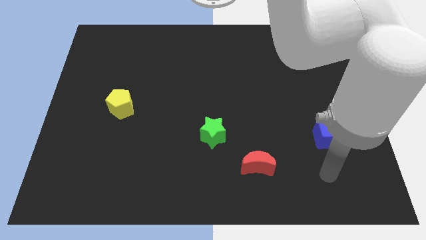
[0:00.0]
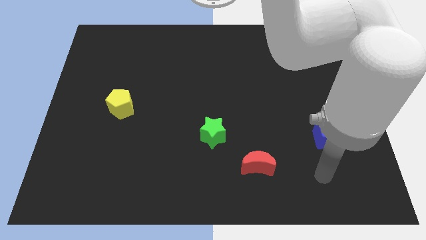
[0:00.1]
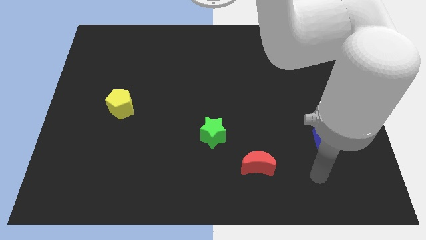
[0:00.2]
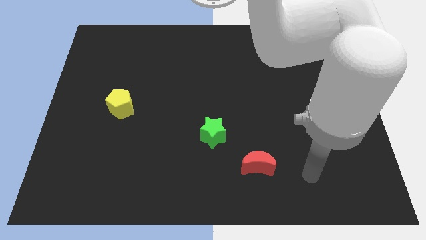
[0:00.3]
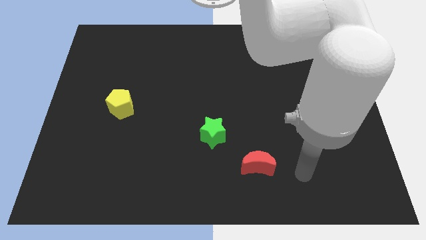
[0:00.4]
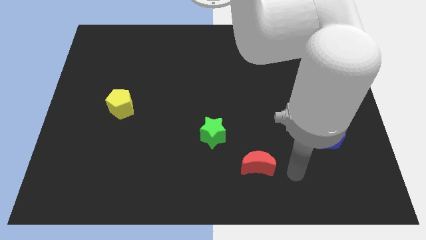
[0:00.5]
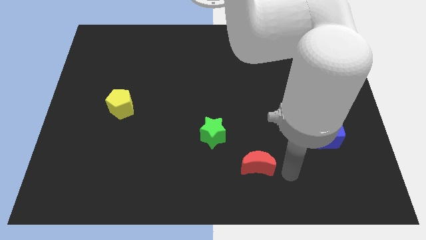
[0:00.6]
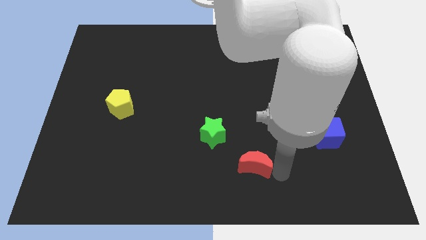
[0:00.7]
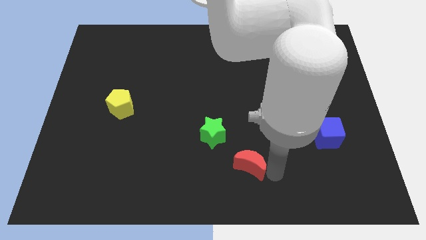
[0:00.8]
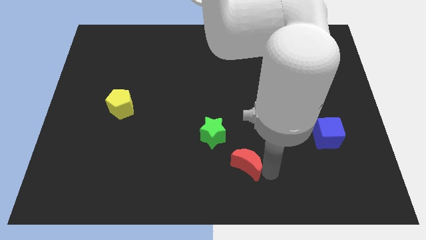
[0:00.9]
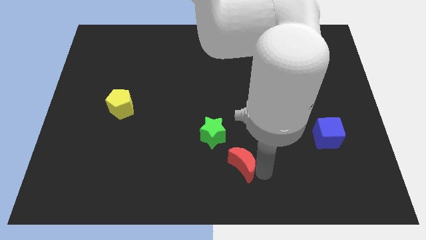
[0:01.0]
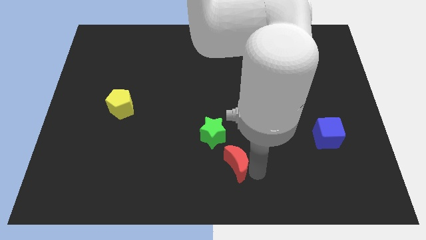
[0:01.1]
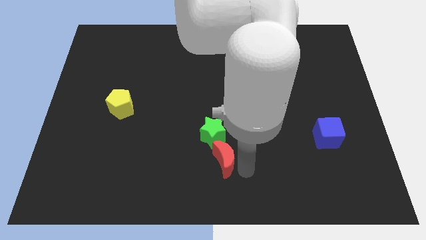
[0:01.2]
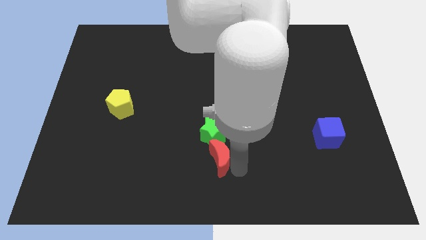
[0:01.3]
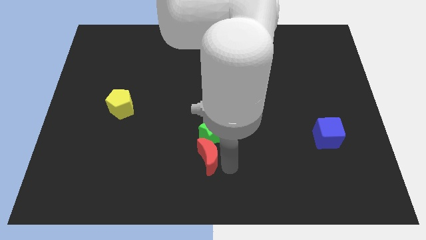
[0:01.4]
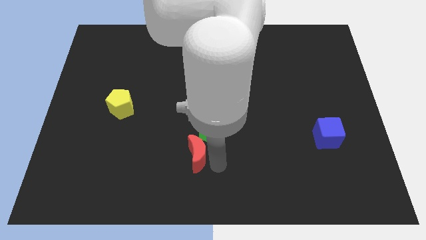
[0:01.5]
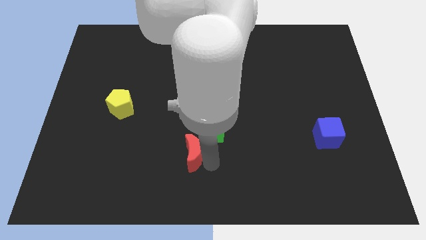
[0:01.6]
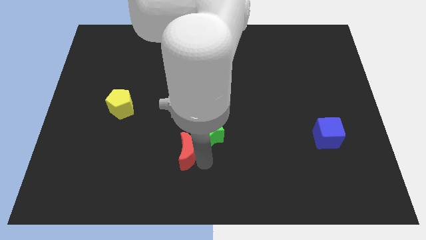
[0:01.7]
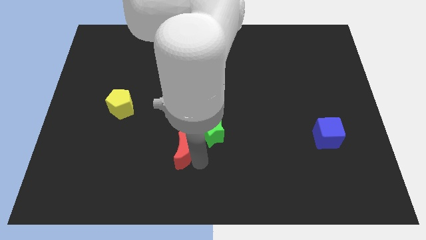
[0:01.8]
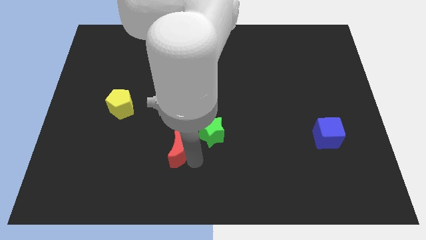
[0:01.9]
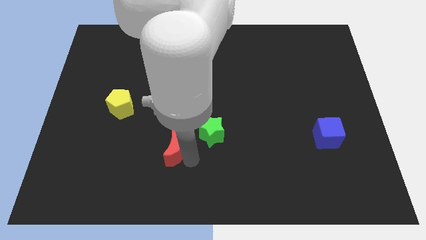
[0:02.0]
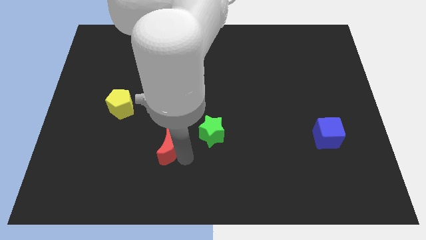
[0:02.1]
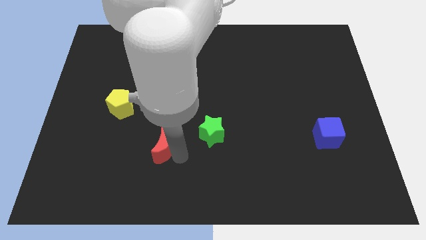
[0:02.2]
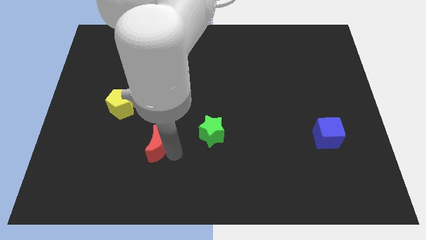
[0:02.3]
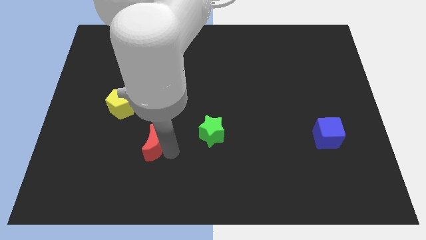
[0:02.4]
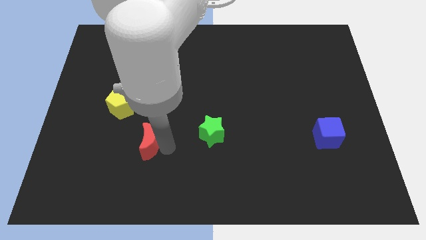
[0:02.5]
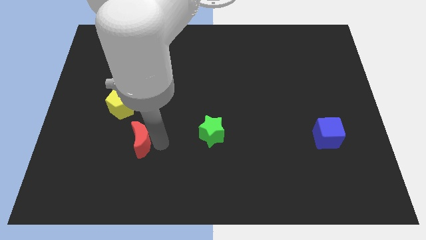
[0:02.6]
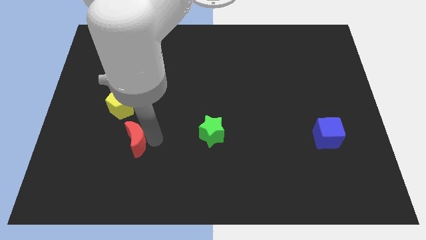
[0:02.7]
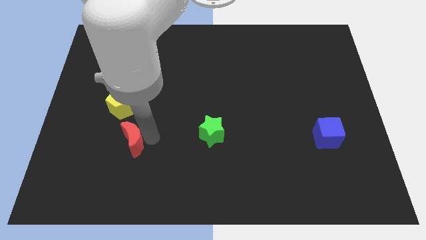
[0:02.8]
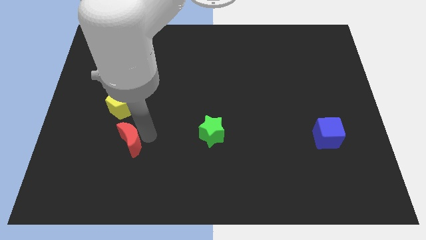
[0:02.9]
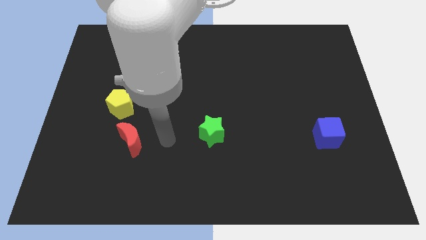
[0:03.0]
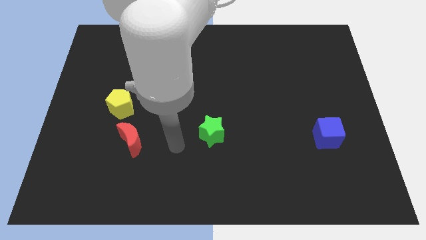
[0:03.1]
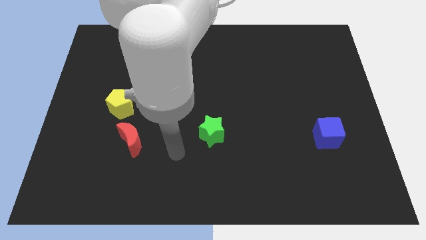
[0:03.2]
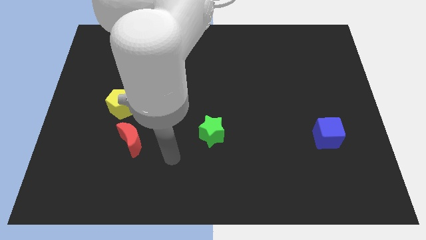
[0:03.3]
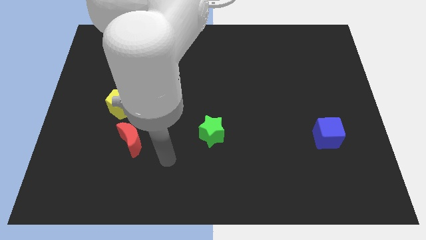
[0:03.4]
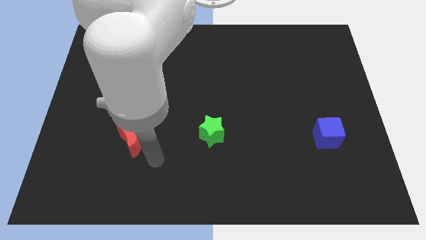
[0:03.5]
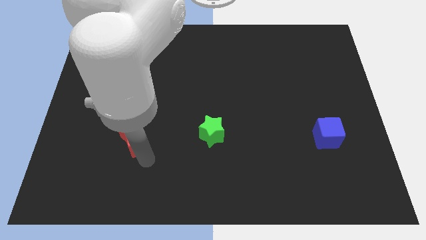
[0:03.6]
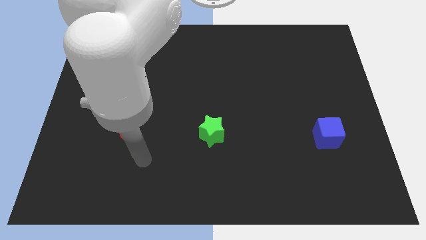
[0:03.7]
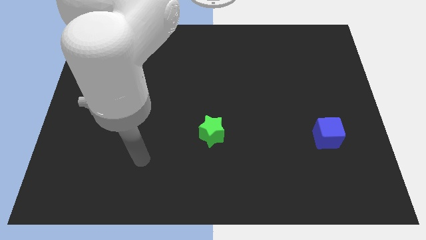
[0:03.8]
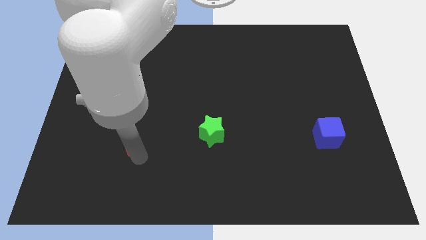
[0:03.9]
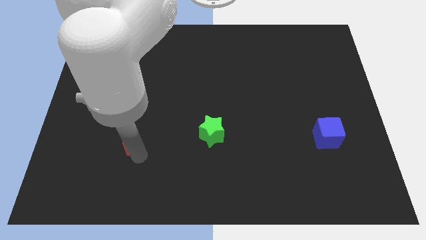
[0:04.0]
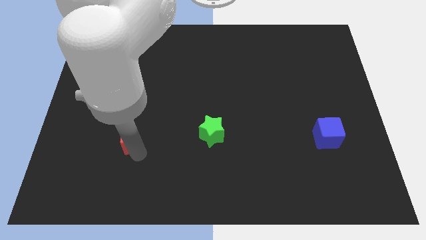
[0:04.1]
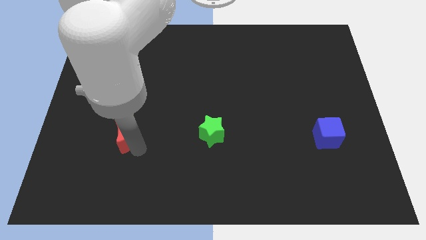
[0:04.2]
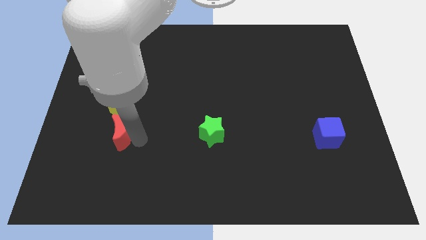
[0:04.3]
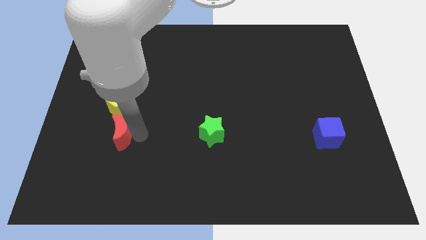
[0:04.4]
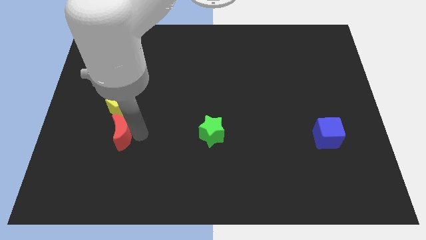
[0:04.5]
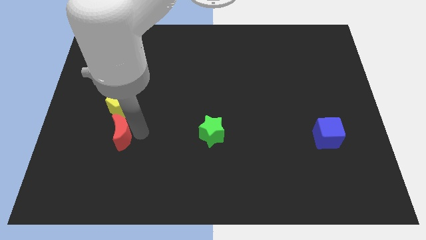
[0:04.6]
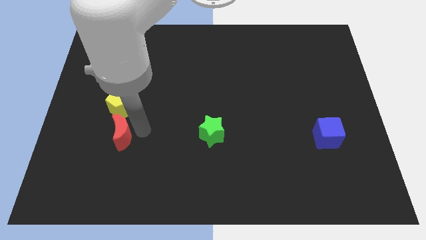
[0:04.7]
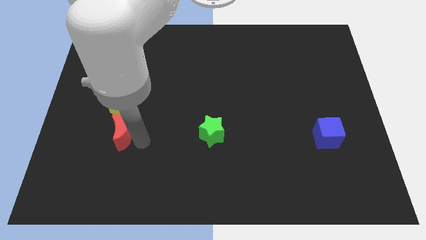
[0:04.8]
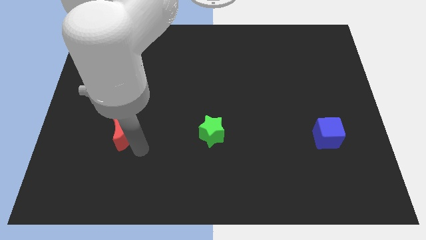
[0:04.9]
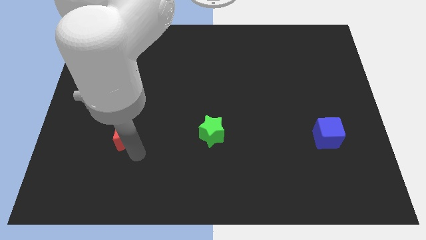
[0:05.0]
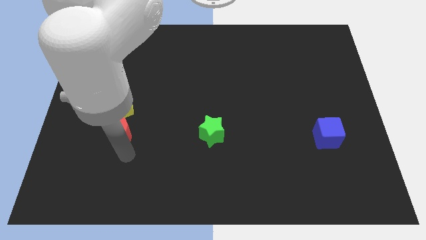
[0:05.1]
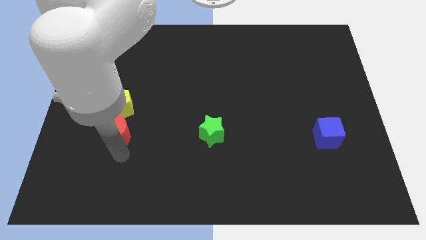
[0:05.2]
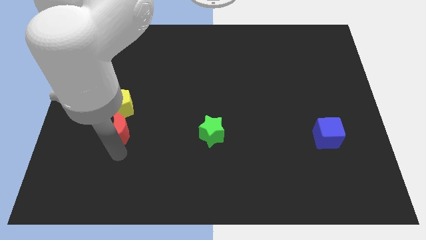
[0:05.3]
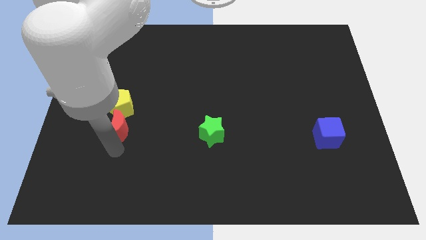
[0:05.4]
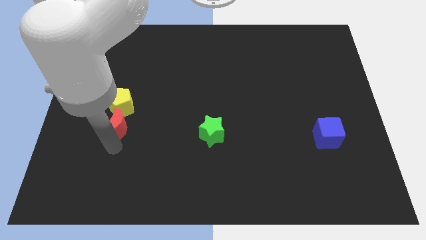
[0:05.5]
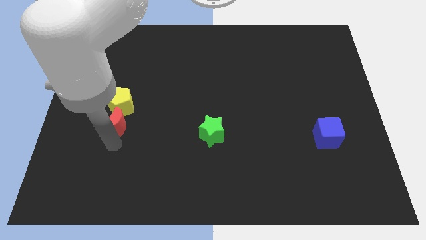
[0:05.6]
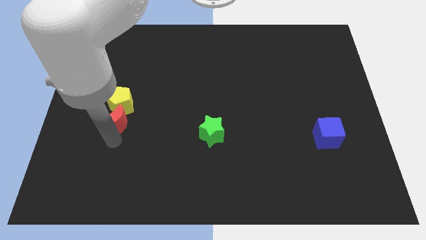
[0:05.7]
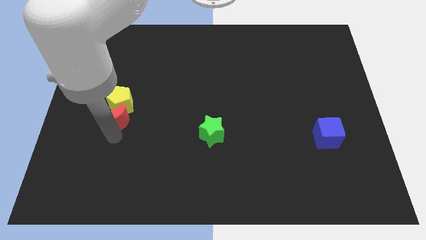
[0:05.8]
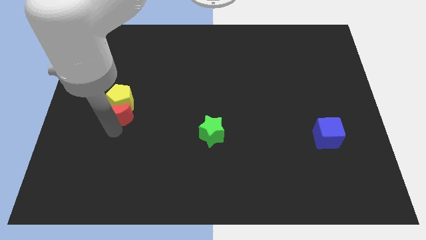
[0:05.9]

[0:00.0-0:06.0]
slide the moon to the yellow block

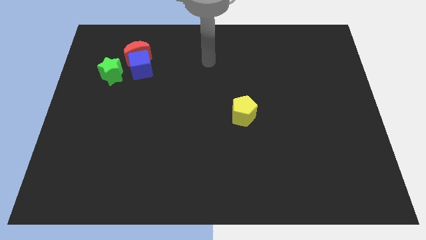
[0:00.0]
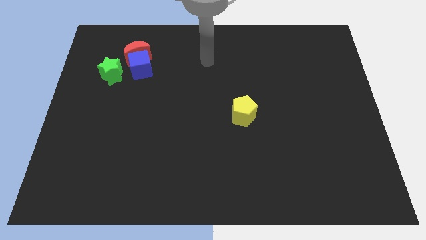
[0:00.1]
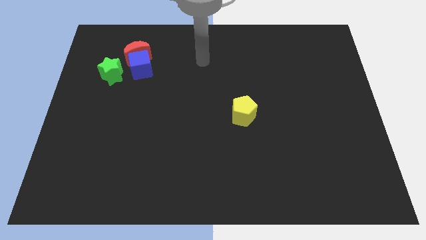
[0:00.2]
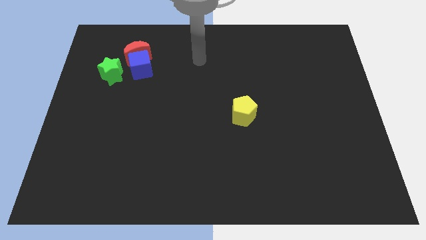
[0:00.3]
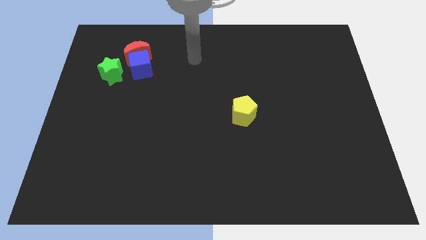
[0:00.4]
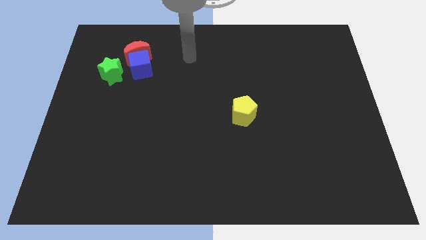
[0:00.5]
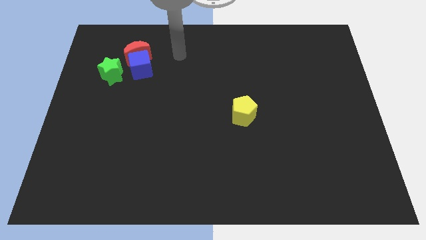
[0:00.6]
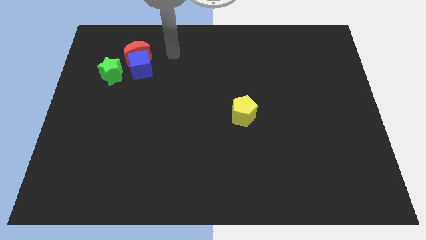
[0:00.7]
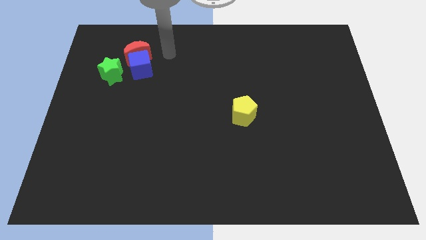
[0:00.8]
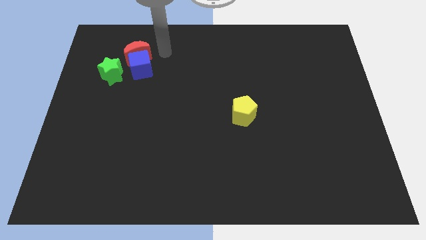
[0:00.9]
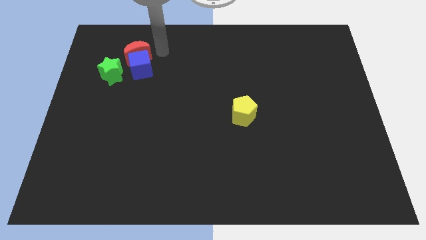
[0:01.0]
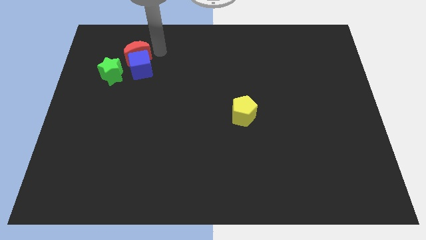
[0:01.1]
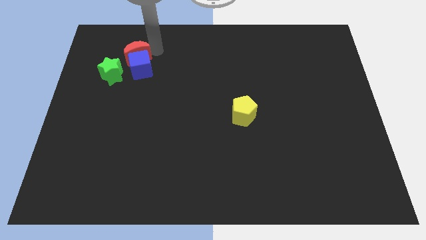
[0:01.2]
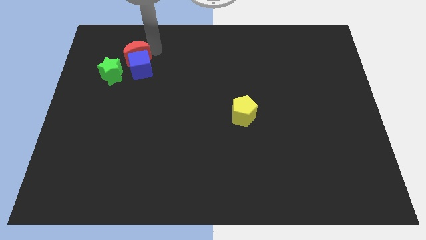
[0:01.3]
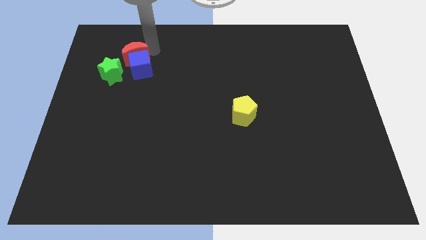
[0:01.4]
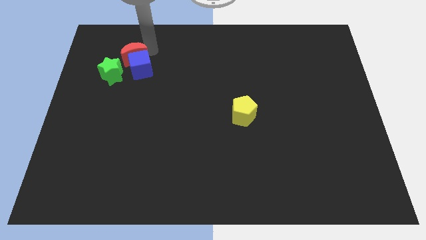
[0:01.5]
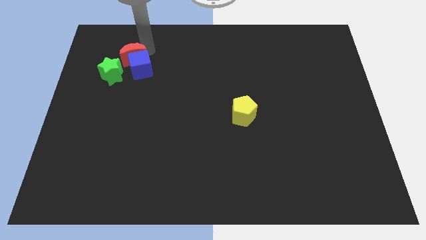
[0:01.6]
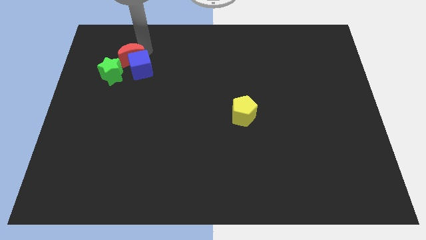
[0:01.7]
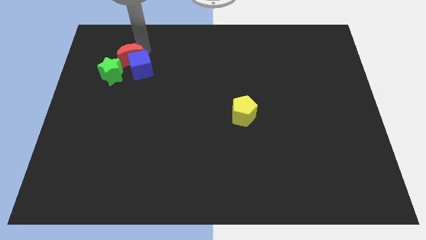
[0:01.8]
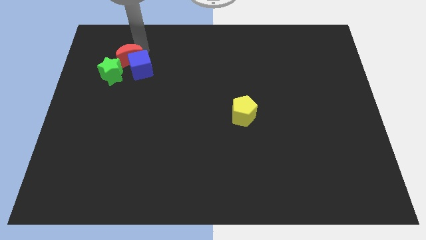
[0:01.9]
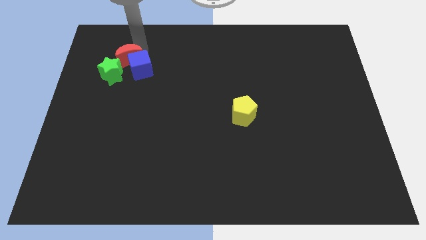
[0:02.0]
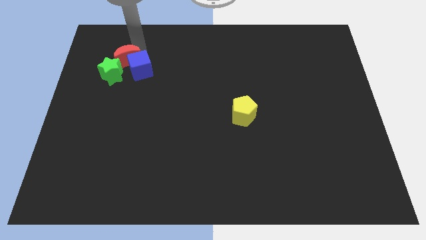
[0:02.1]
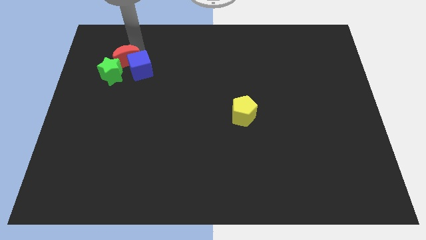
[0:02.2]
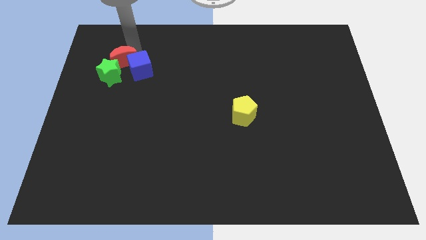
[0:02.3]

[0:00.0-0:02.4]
push the red block close to the green star

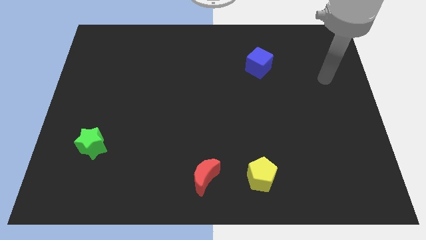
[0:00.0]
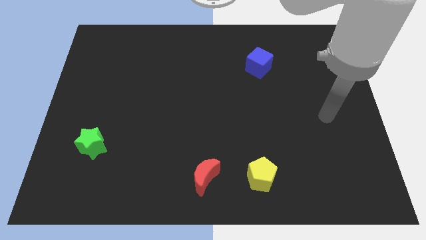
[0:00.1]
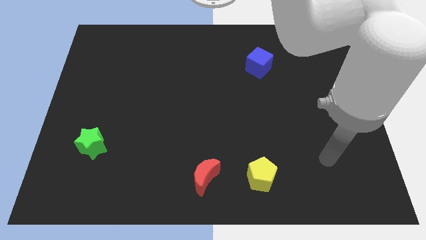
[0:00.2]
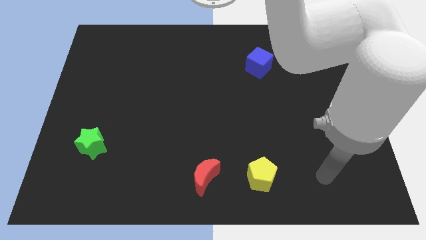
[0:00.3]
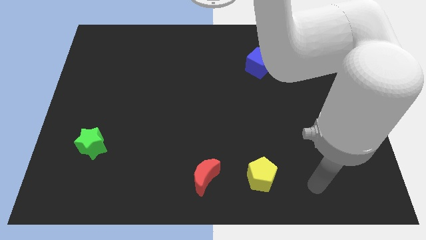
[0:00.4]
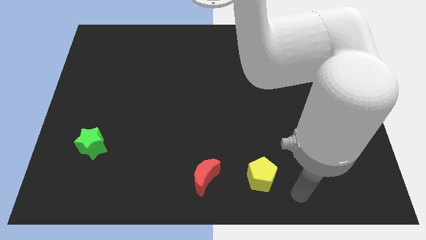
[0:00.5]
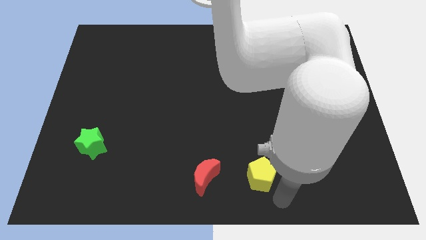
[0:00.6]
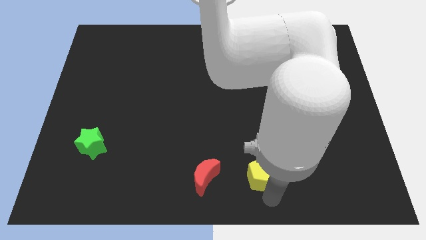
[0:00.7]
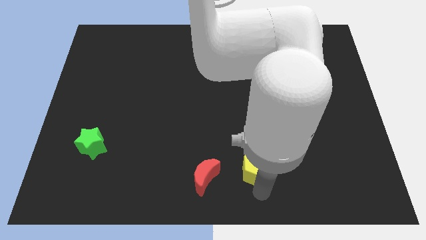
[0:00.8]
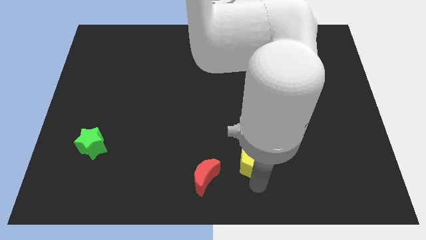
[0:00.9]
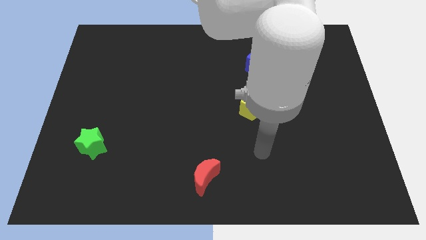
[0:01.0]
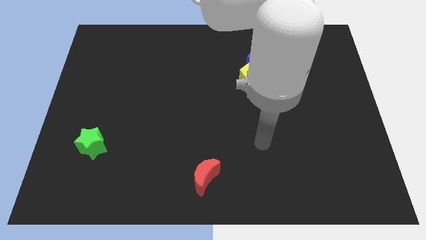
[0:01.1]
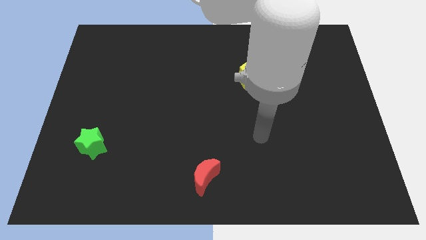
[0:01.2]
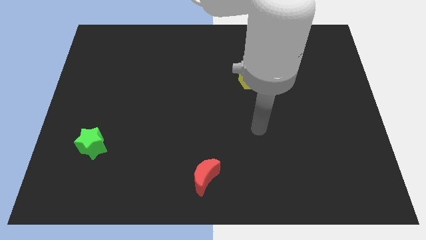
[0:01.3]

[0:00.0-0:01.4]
move the pentagon next to the cube
